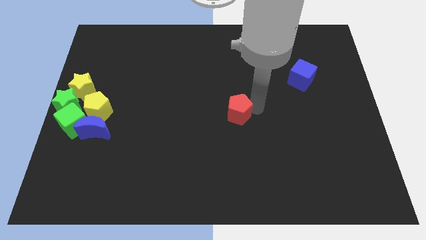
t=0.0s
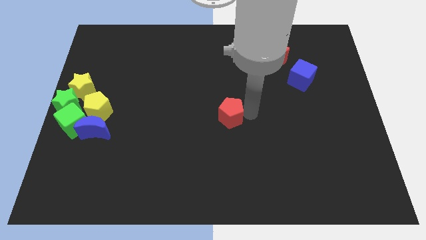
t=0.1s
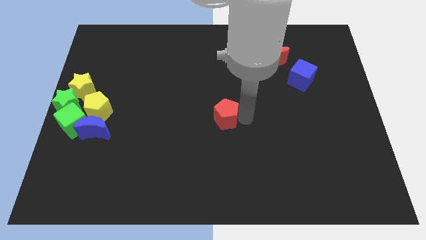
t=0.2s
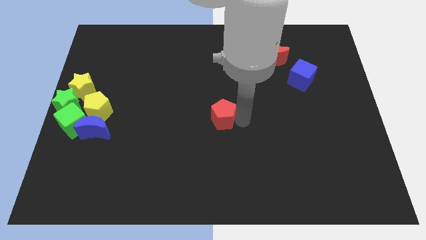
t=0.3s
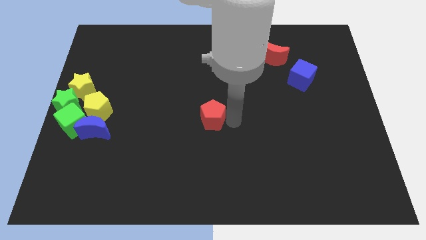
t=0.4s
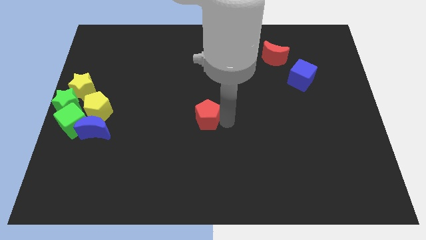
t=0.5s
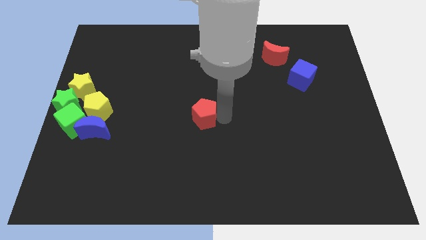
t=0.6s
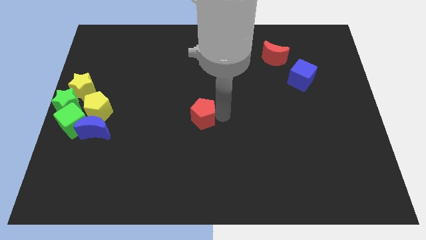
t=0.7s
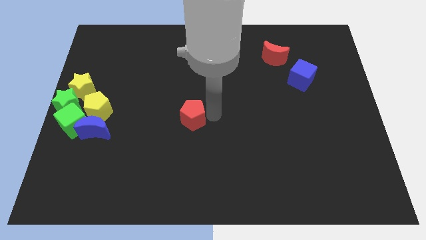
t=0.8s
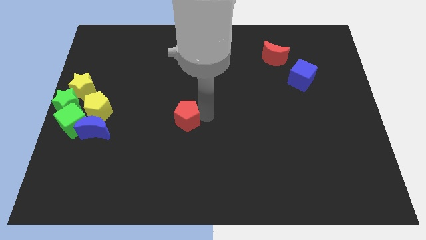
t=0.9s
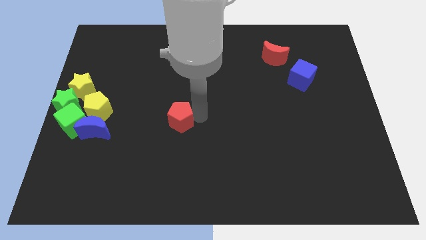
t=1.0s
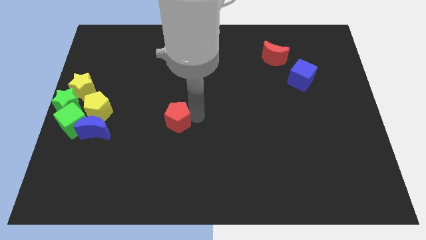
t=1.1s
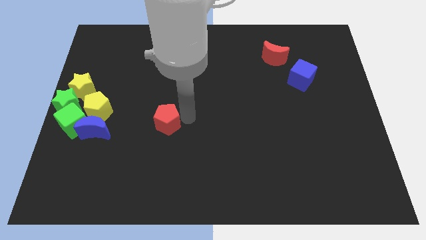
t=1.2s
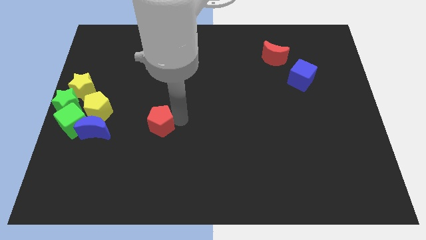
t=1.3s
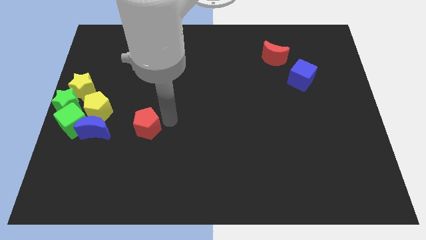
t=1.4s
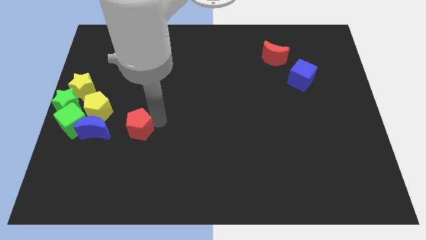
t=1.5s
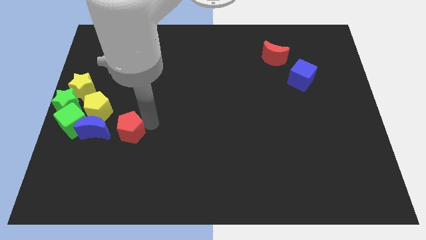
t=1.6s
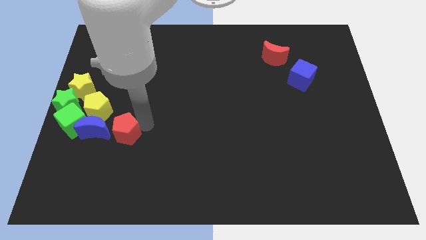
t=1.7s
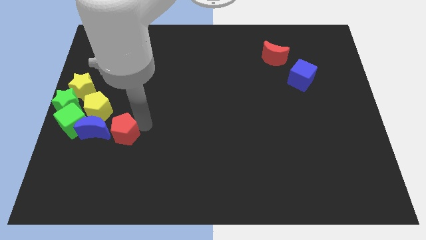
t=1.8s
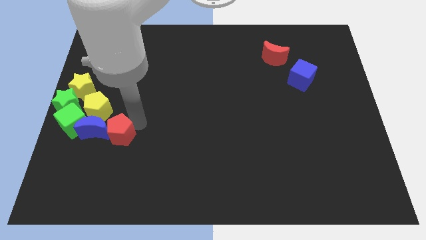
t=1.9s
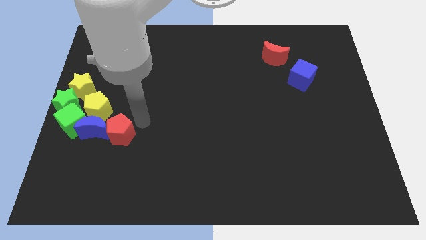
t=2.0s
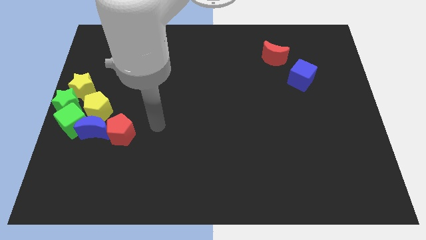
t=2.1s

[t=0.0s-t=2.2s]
place the red pentagon close to blue crescent

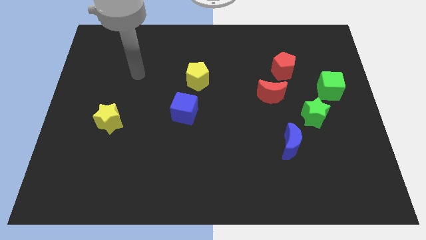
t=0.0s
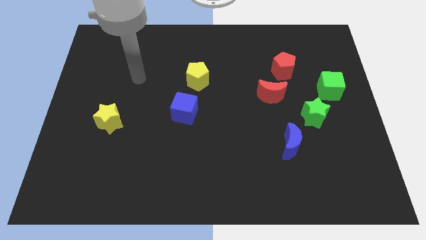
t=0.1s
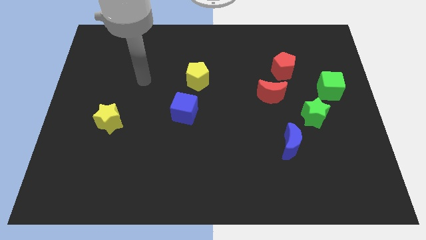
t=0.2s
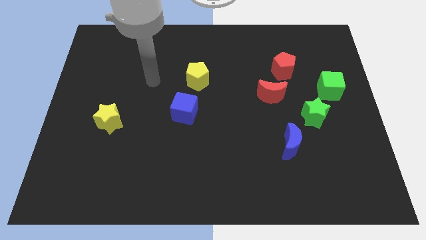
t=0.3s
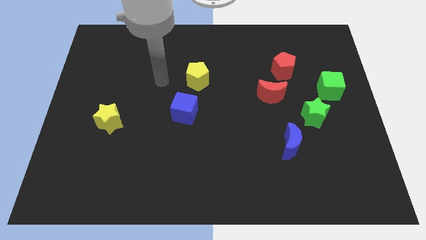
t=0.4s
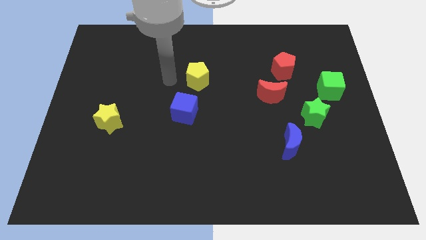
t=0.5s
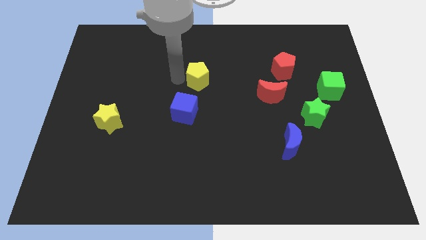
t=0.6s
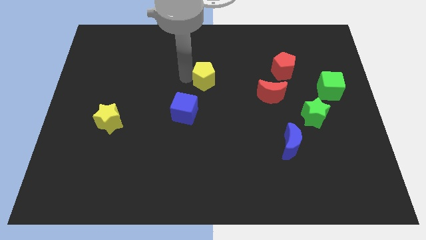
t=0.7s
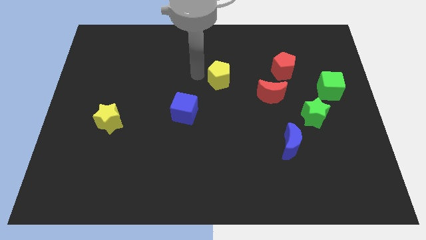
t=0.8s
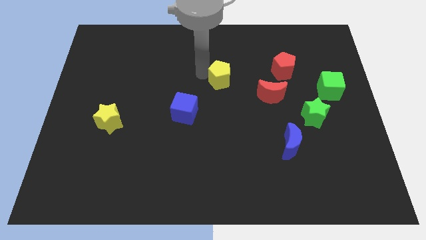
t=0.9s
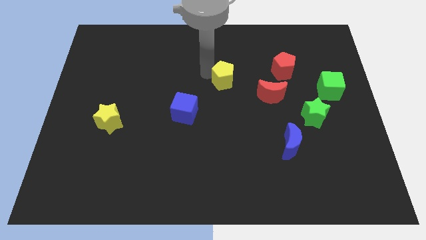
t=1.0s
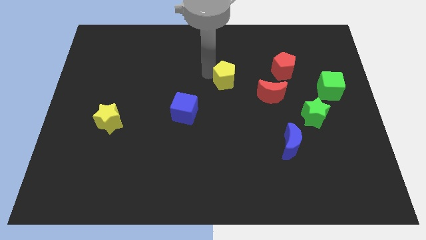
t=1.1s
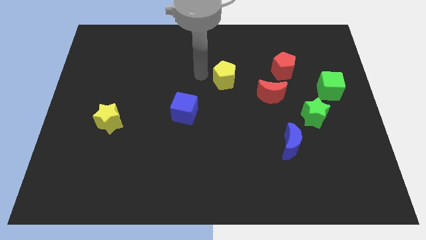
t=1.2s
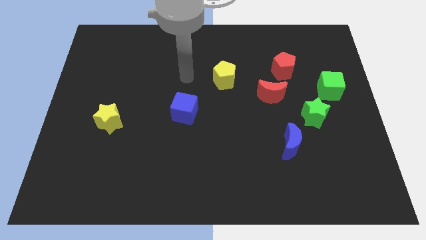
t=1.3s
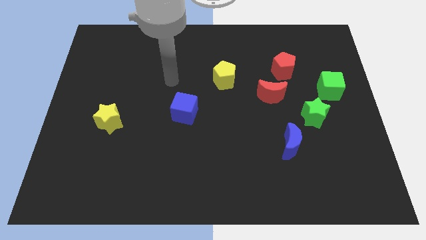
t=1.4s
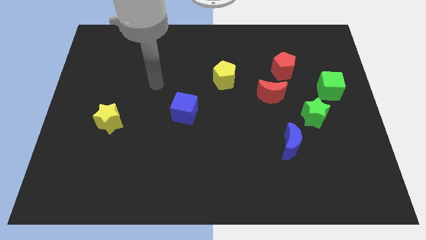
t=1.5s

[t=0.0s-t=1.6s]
push the yellow pentagon to the left of the red blocks

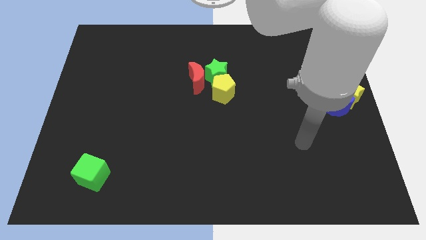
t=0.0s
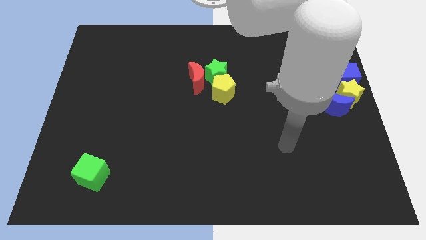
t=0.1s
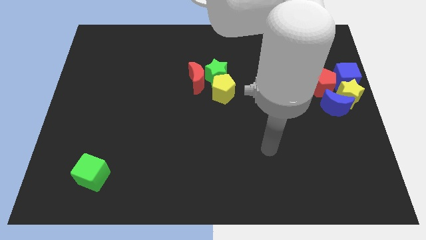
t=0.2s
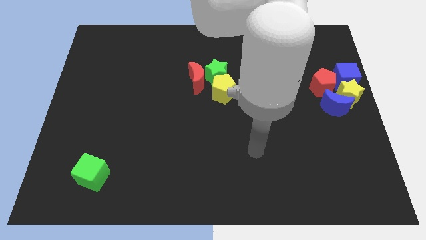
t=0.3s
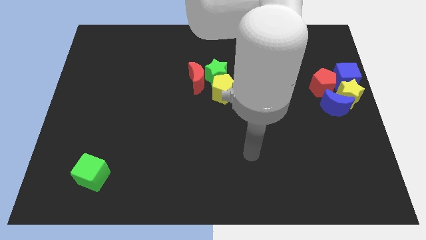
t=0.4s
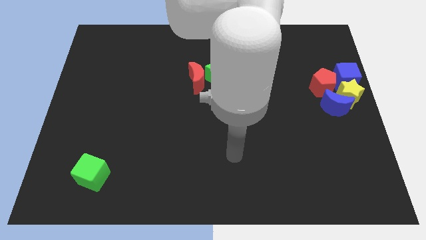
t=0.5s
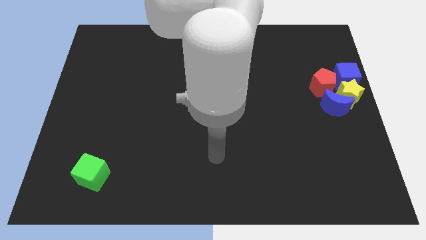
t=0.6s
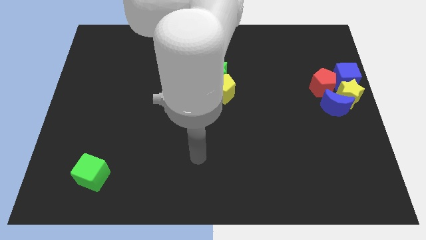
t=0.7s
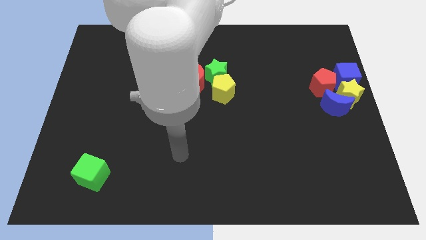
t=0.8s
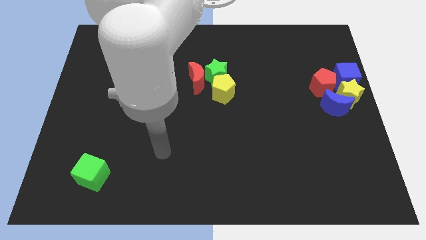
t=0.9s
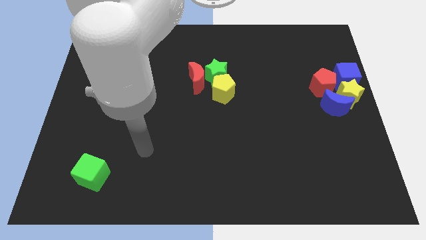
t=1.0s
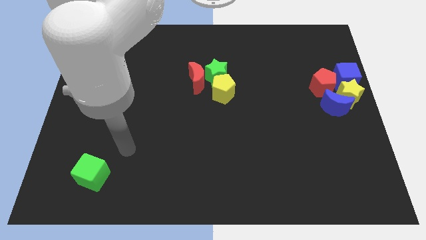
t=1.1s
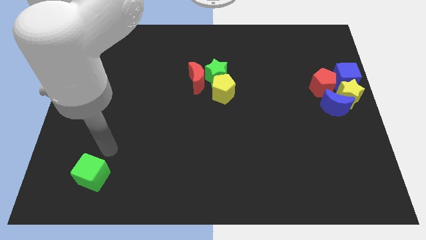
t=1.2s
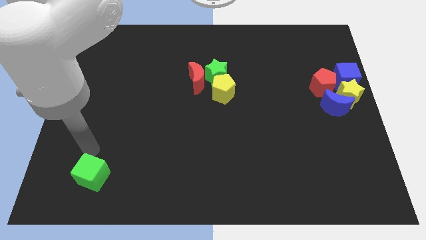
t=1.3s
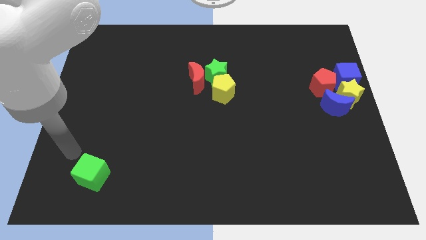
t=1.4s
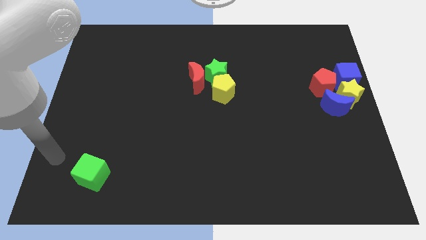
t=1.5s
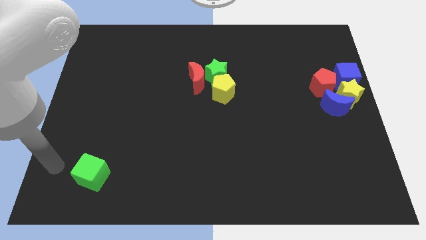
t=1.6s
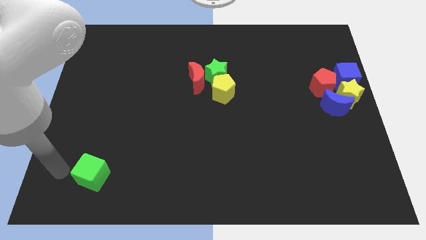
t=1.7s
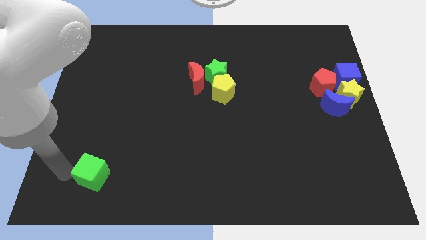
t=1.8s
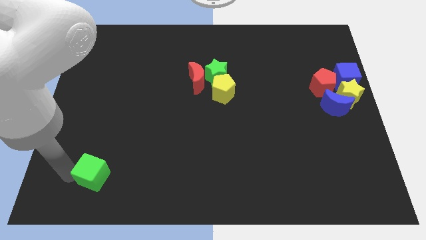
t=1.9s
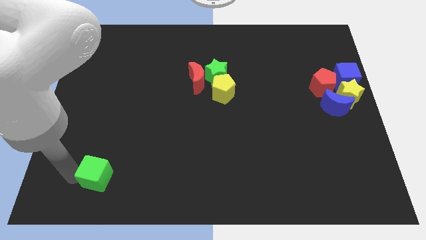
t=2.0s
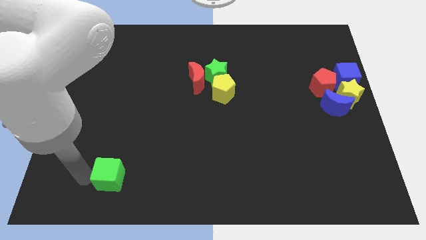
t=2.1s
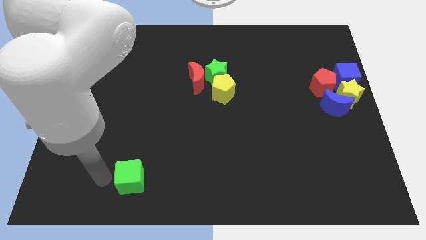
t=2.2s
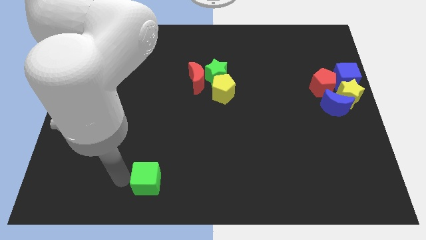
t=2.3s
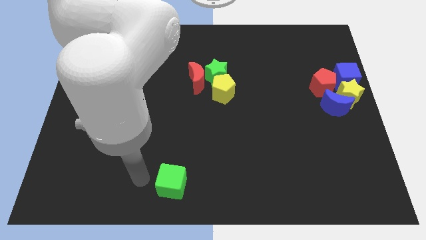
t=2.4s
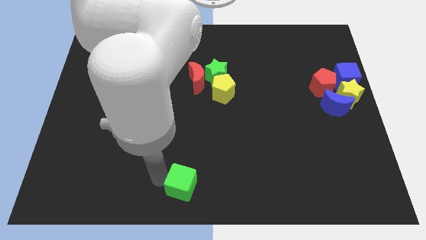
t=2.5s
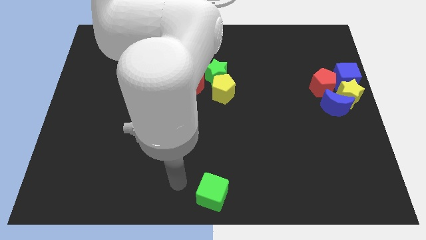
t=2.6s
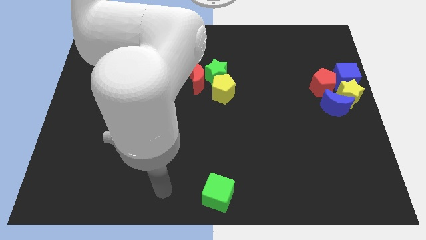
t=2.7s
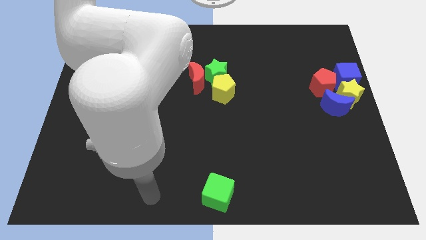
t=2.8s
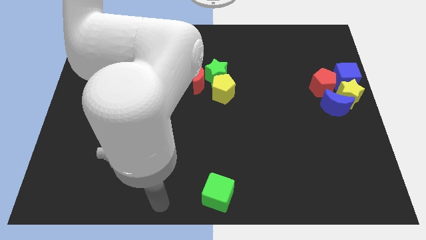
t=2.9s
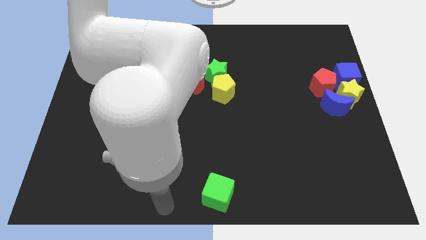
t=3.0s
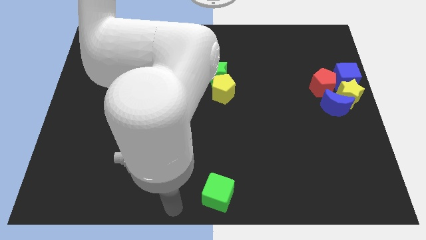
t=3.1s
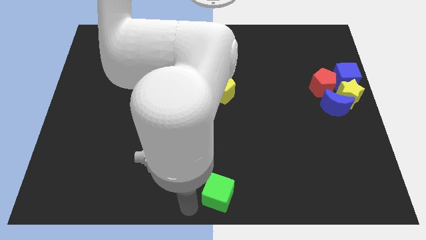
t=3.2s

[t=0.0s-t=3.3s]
place the green cube at the bottom center

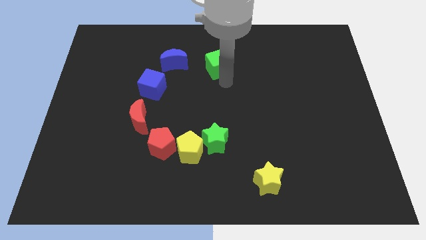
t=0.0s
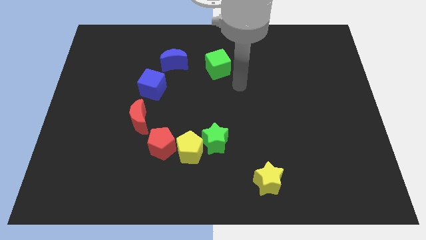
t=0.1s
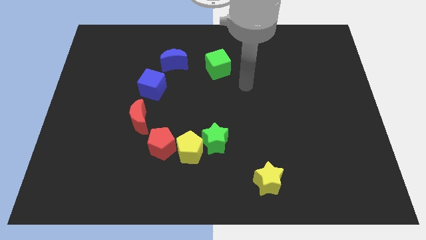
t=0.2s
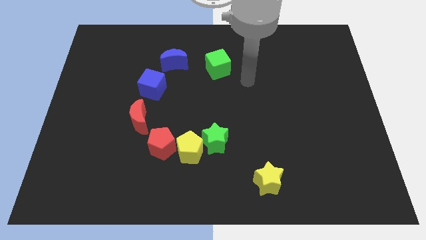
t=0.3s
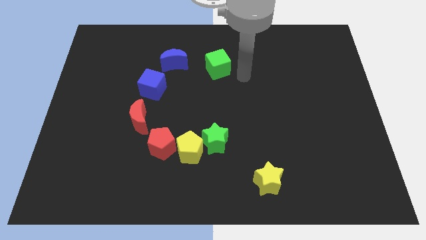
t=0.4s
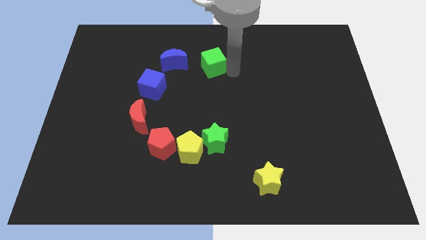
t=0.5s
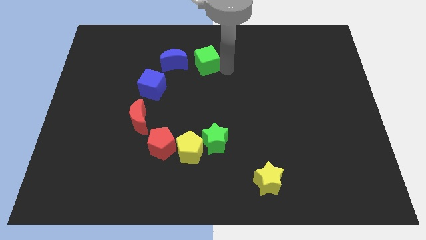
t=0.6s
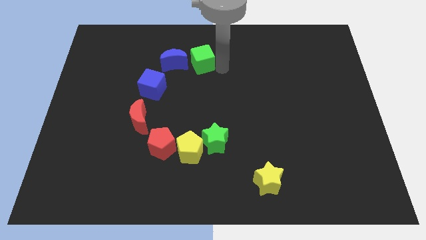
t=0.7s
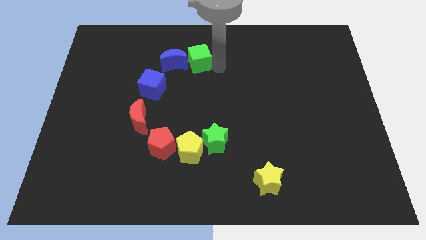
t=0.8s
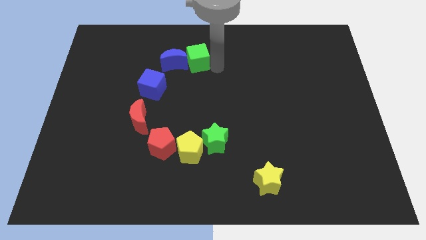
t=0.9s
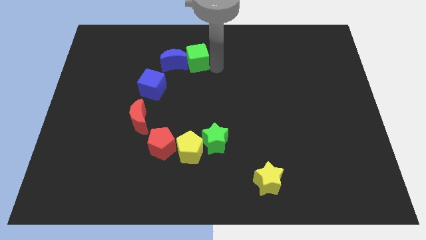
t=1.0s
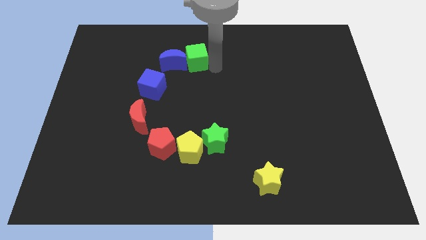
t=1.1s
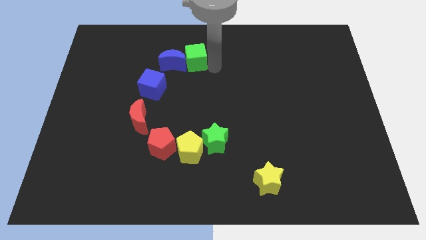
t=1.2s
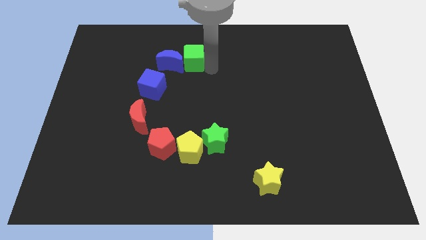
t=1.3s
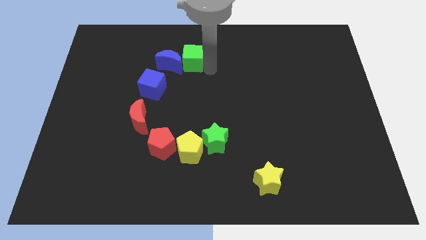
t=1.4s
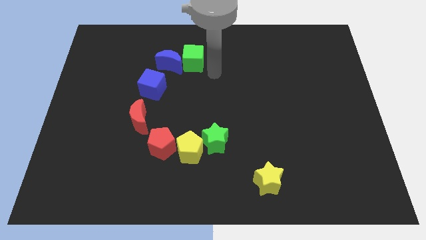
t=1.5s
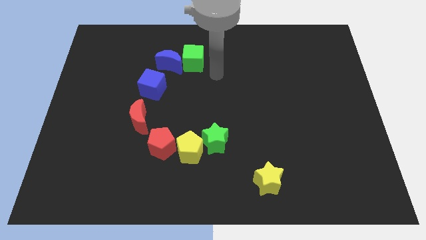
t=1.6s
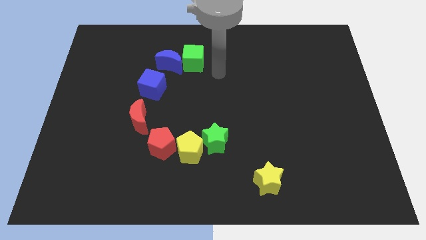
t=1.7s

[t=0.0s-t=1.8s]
move the green cube right beside the blue crescent

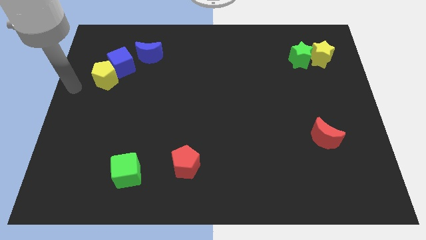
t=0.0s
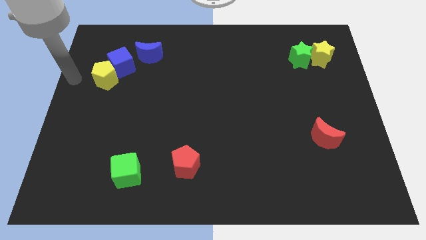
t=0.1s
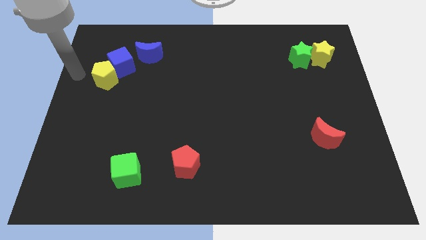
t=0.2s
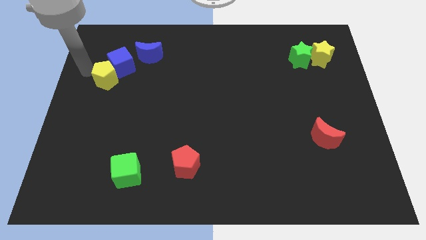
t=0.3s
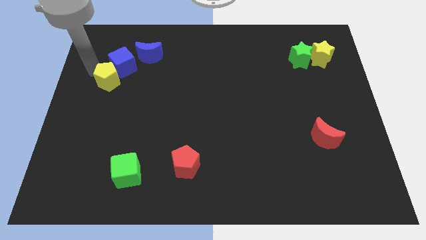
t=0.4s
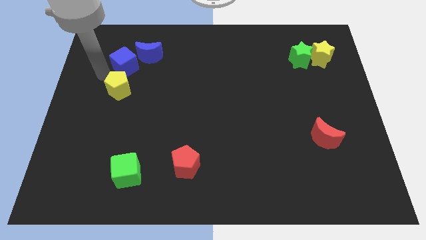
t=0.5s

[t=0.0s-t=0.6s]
tap yellow pentagon on left
